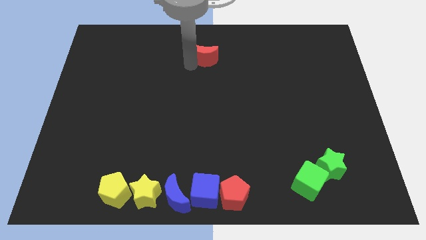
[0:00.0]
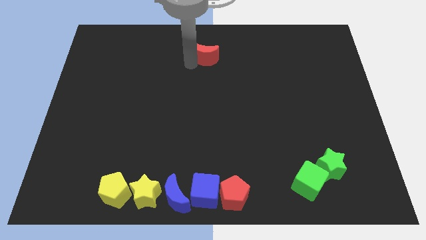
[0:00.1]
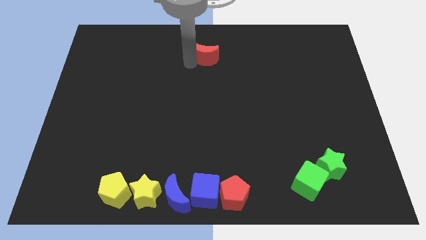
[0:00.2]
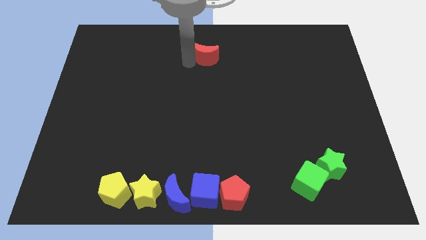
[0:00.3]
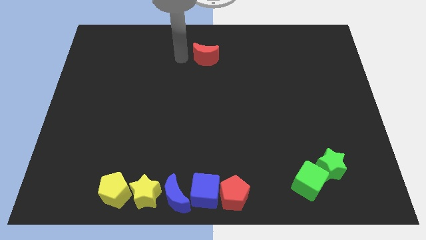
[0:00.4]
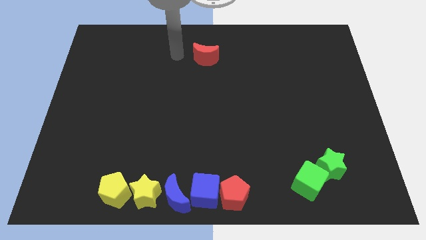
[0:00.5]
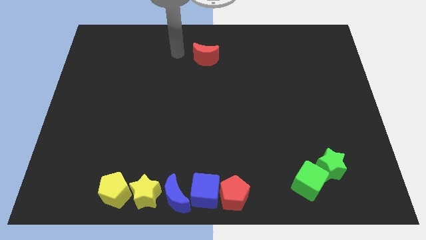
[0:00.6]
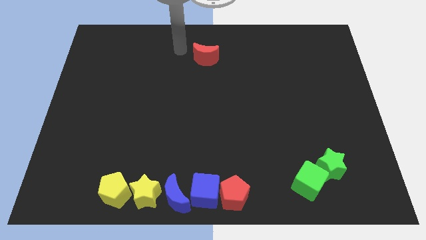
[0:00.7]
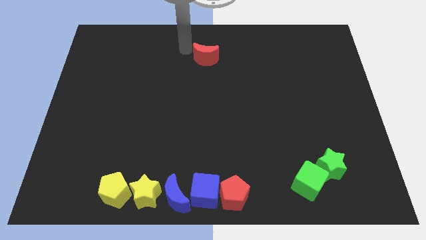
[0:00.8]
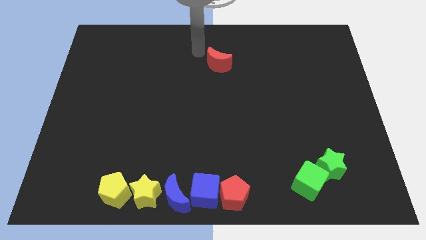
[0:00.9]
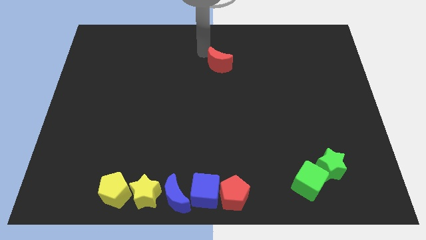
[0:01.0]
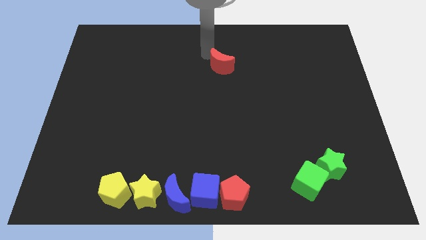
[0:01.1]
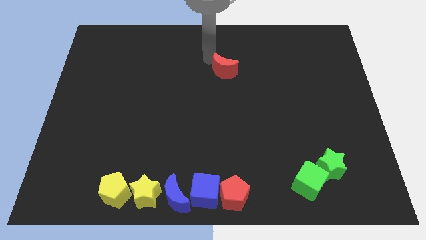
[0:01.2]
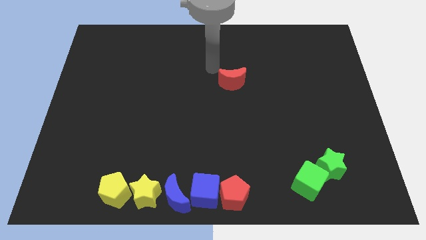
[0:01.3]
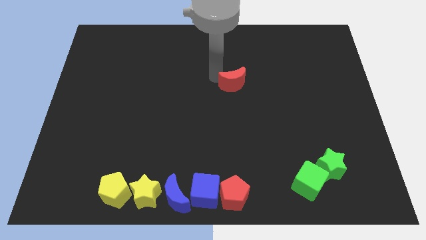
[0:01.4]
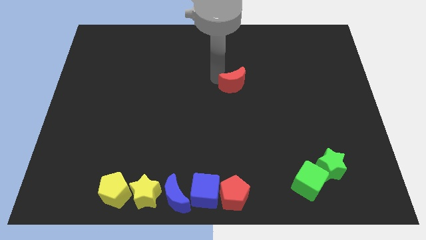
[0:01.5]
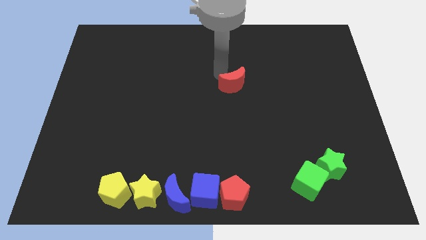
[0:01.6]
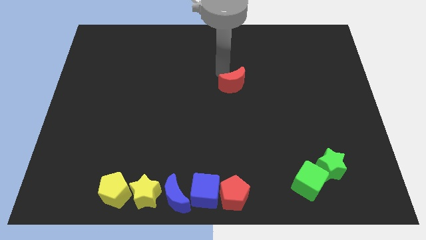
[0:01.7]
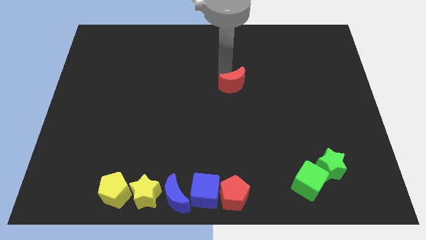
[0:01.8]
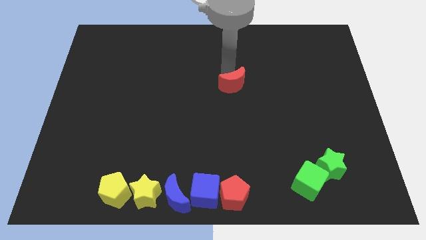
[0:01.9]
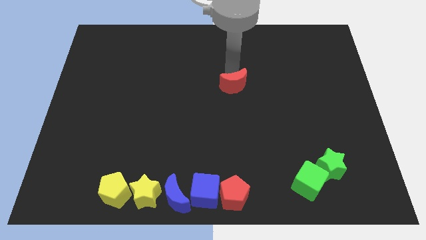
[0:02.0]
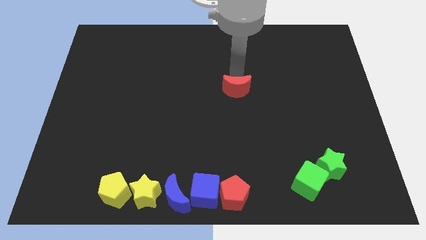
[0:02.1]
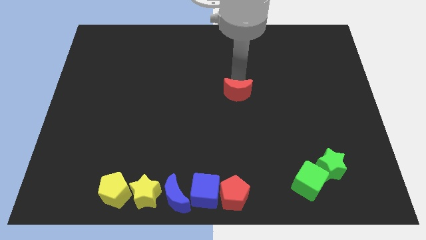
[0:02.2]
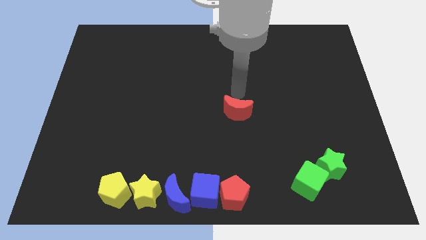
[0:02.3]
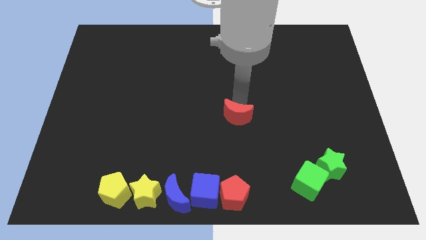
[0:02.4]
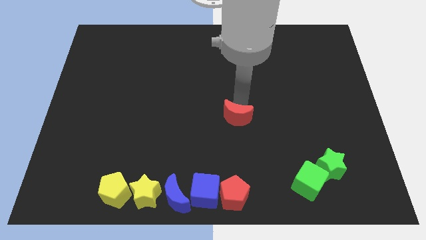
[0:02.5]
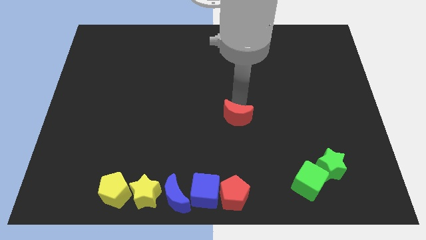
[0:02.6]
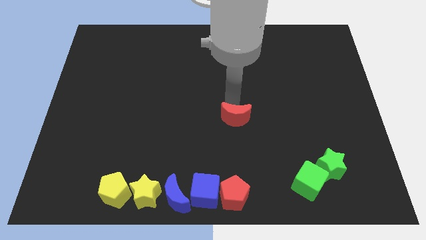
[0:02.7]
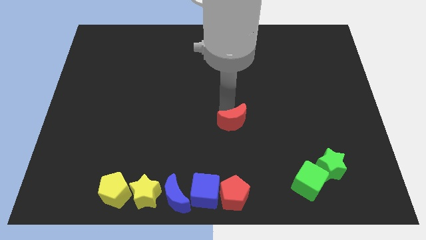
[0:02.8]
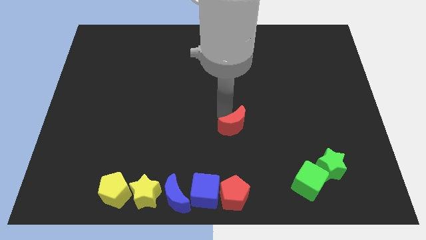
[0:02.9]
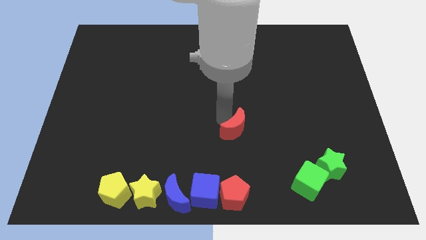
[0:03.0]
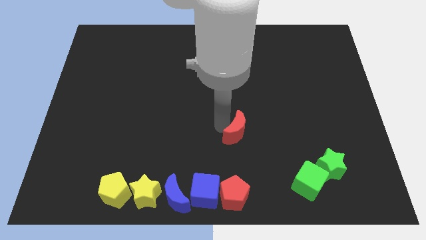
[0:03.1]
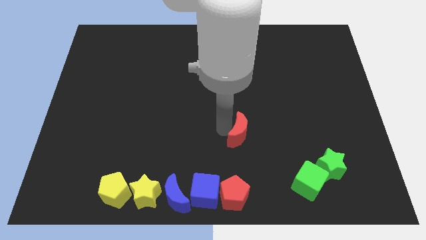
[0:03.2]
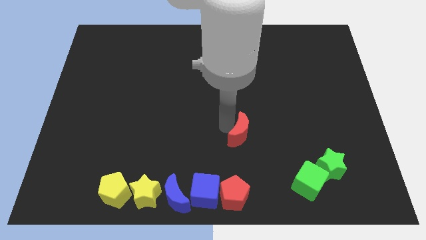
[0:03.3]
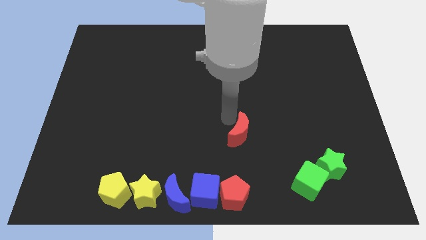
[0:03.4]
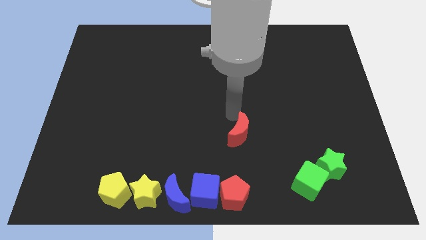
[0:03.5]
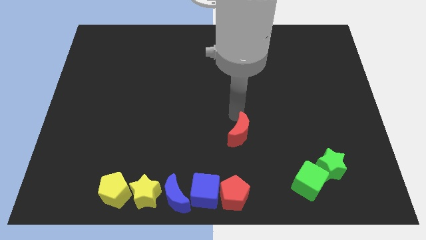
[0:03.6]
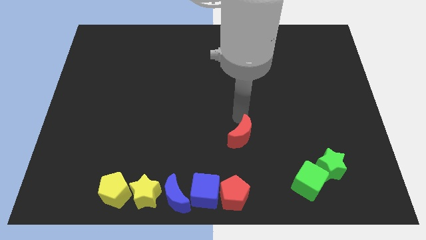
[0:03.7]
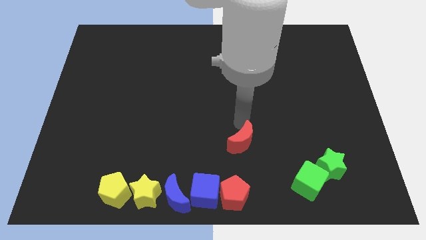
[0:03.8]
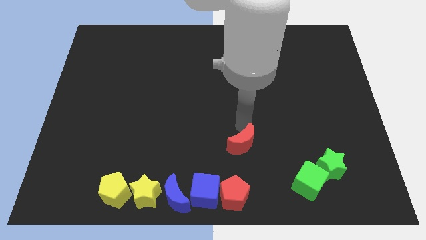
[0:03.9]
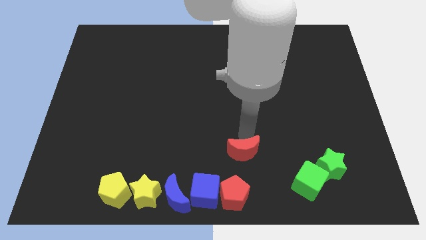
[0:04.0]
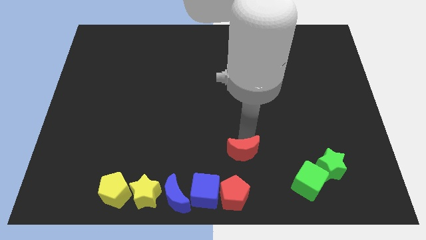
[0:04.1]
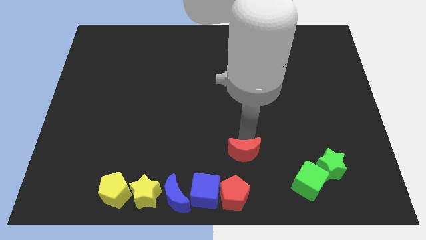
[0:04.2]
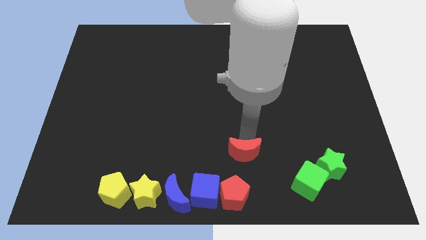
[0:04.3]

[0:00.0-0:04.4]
place the red moon above the red pentagon

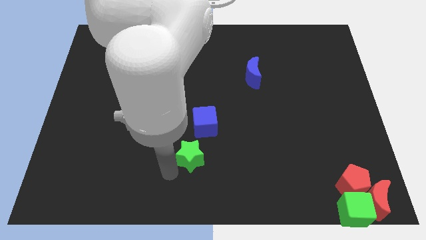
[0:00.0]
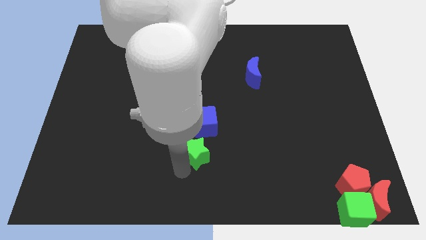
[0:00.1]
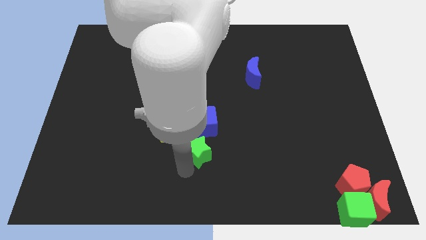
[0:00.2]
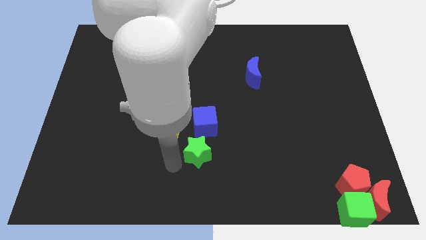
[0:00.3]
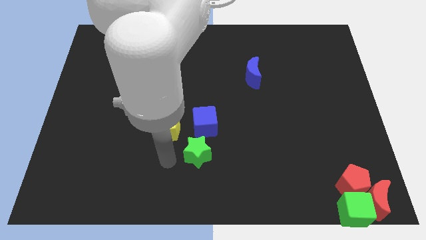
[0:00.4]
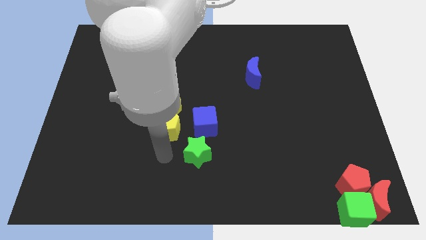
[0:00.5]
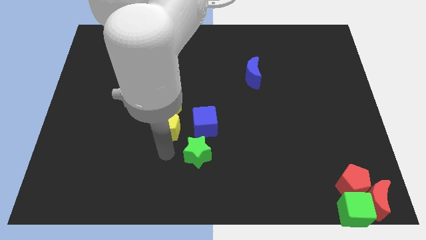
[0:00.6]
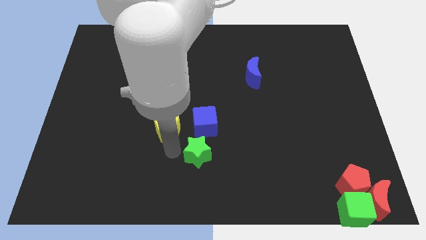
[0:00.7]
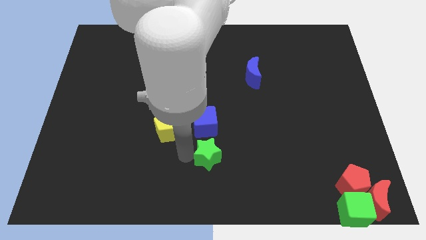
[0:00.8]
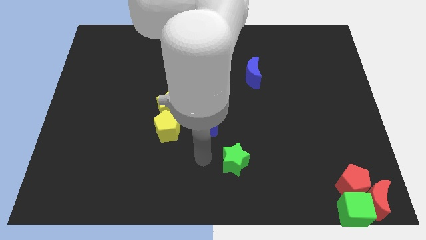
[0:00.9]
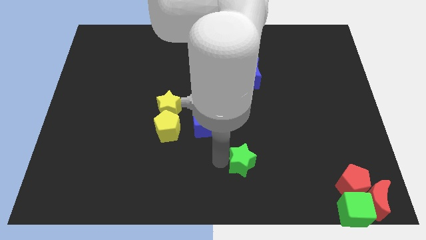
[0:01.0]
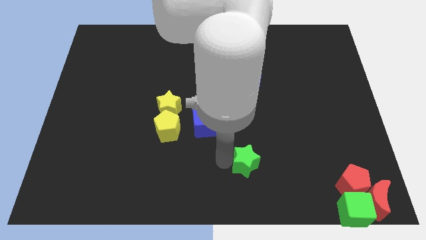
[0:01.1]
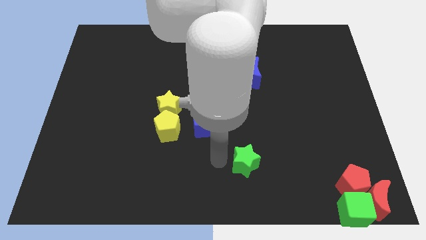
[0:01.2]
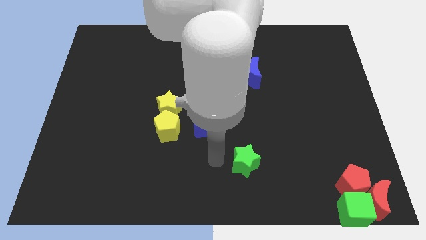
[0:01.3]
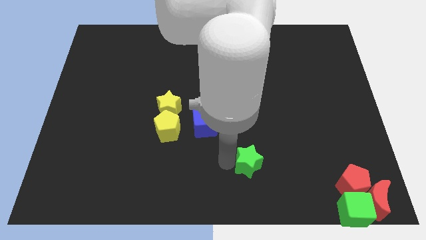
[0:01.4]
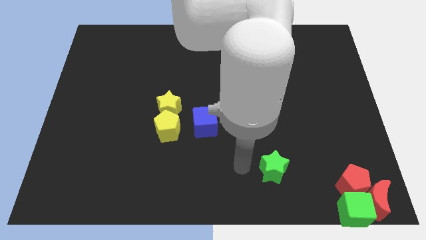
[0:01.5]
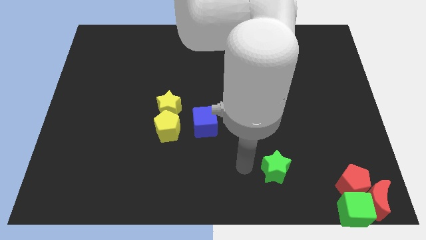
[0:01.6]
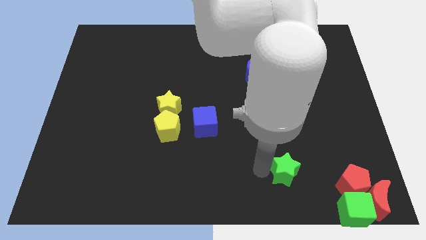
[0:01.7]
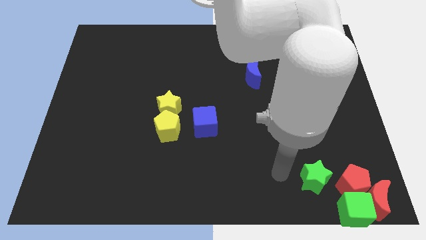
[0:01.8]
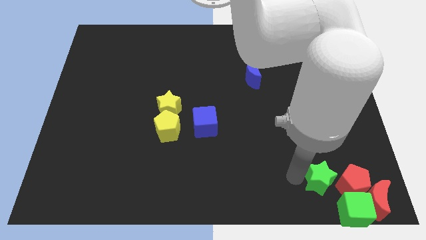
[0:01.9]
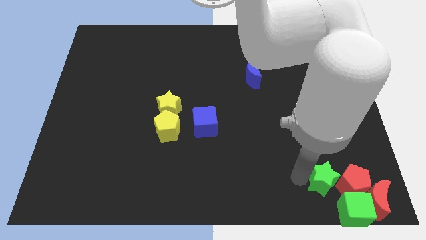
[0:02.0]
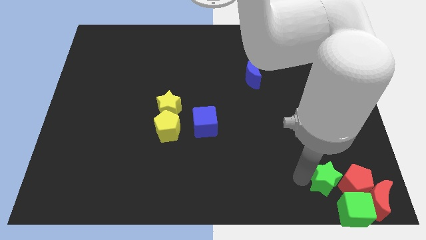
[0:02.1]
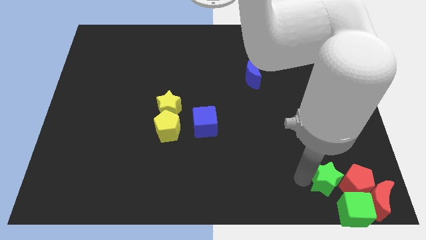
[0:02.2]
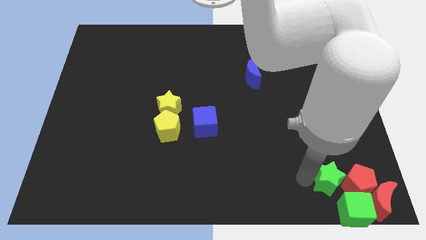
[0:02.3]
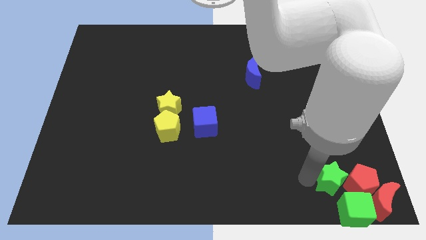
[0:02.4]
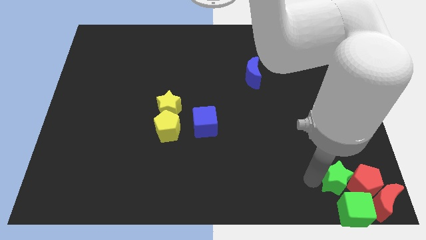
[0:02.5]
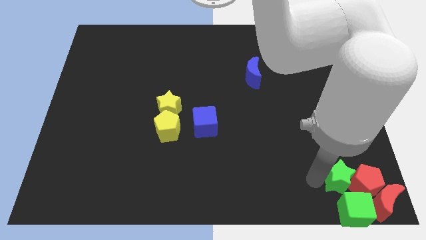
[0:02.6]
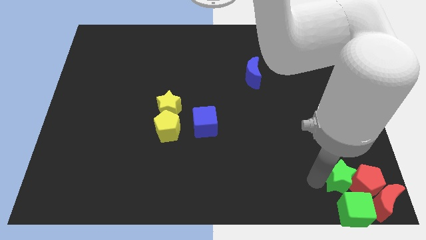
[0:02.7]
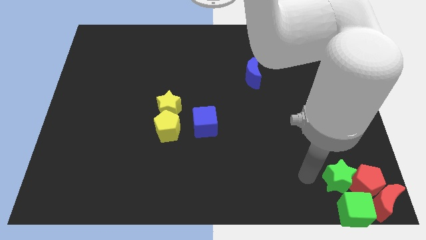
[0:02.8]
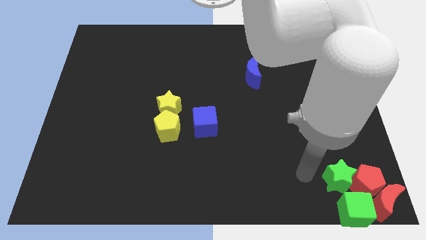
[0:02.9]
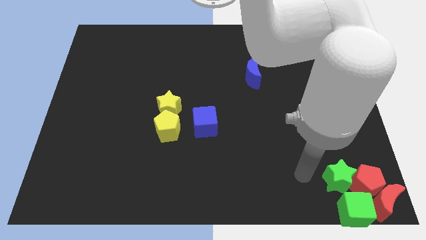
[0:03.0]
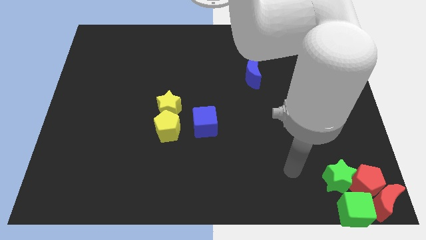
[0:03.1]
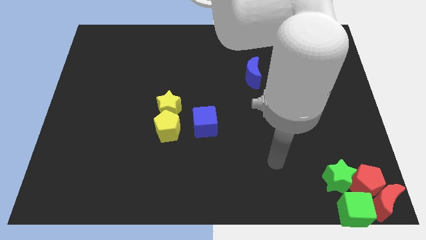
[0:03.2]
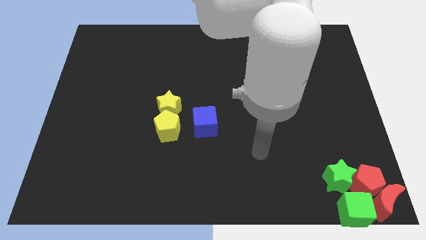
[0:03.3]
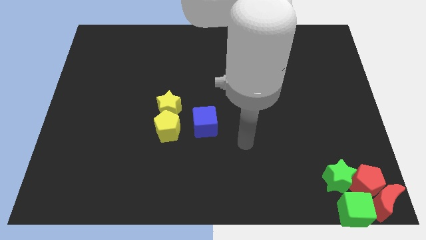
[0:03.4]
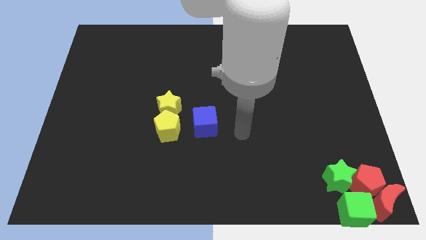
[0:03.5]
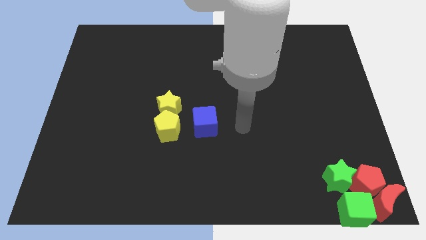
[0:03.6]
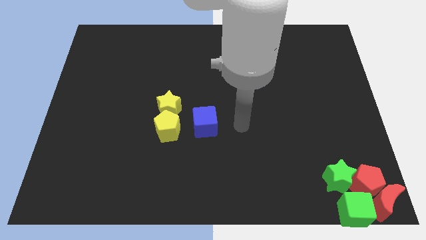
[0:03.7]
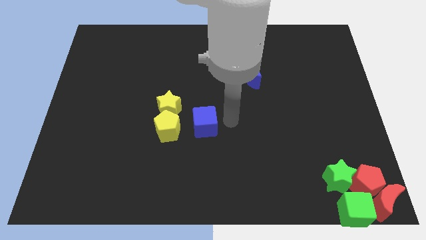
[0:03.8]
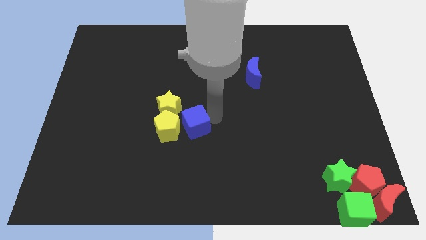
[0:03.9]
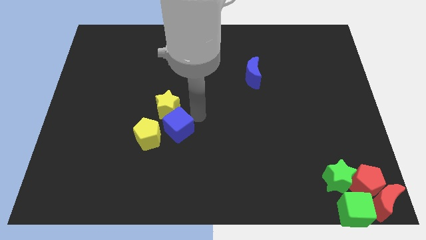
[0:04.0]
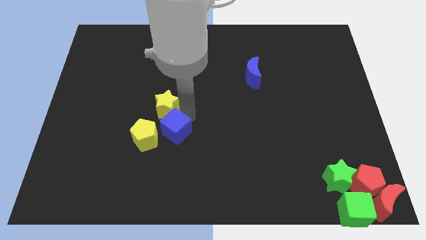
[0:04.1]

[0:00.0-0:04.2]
move green star left beside the red pentagon

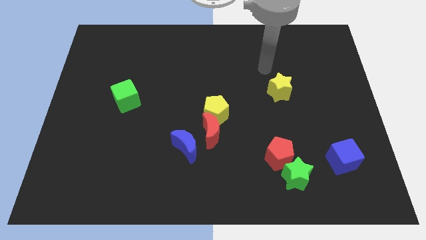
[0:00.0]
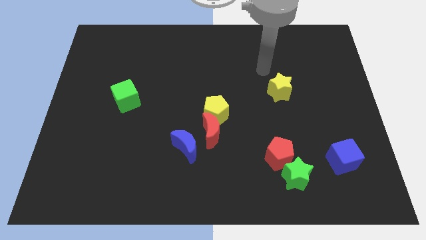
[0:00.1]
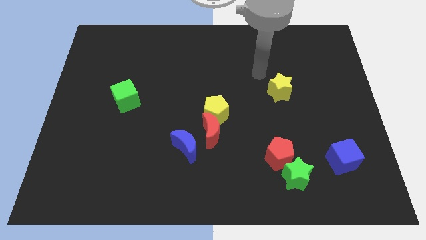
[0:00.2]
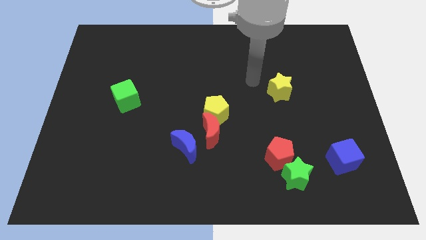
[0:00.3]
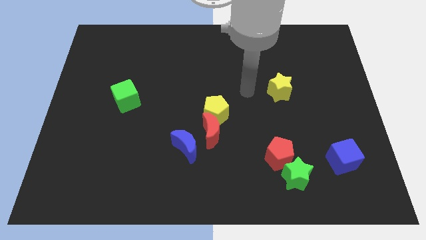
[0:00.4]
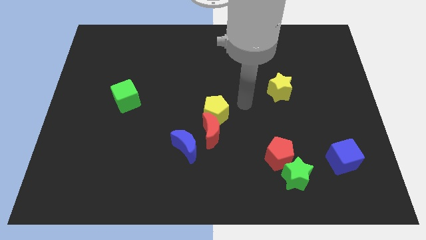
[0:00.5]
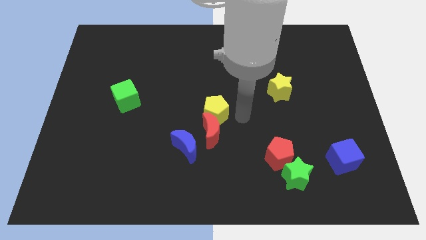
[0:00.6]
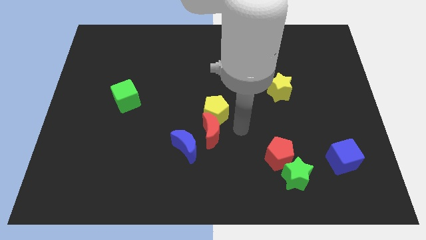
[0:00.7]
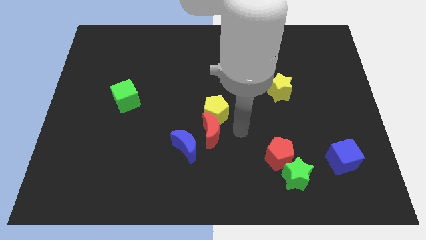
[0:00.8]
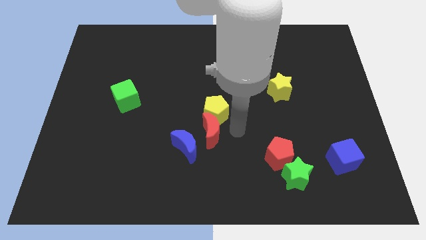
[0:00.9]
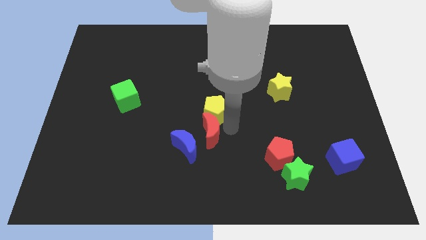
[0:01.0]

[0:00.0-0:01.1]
move your arm to the right of yellow pentagon
